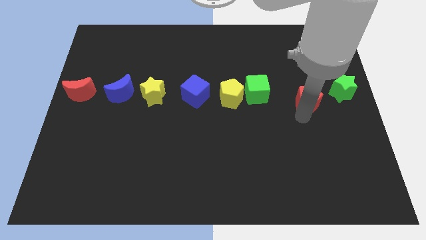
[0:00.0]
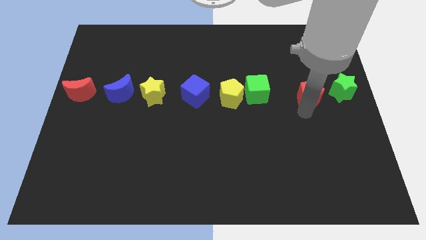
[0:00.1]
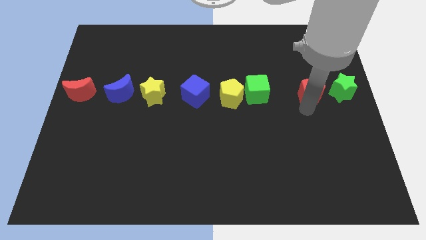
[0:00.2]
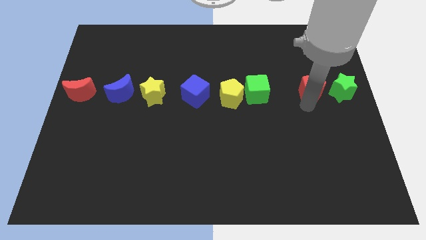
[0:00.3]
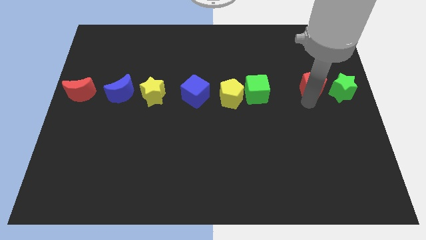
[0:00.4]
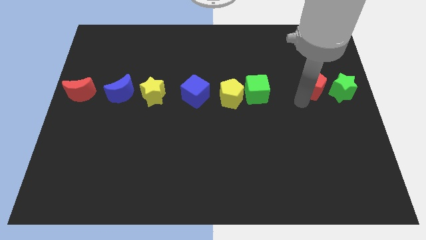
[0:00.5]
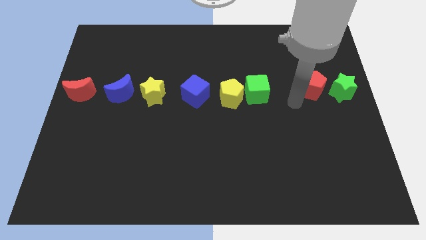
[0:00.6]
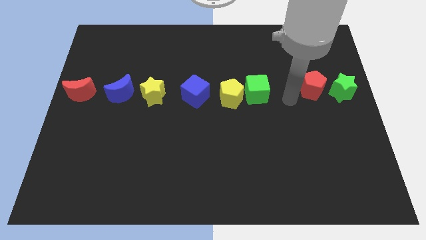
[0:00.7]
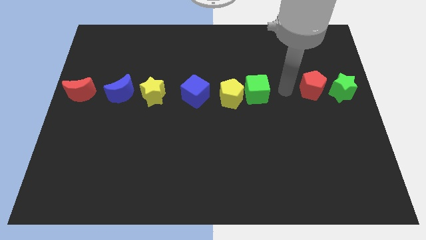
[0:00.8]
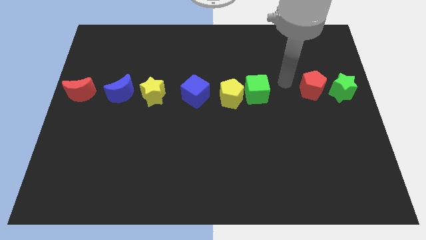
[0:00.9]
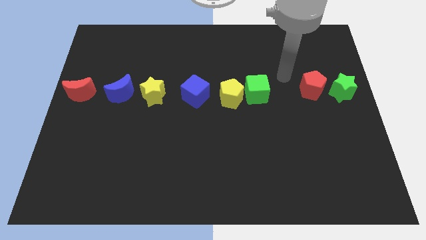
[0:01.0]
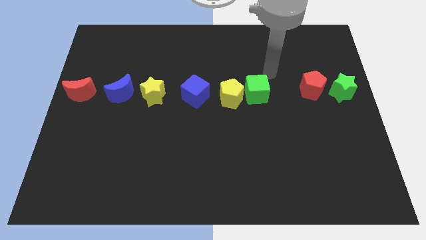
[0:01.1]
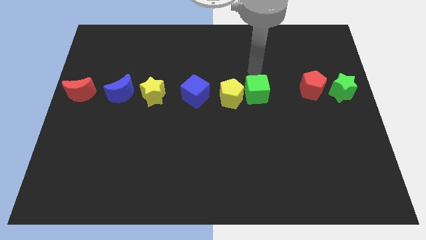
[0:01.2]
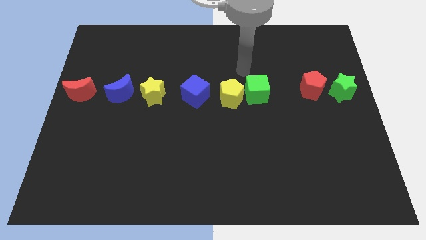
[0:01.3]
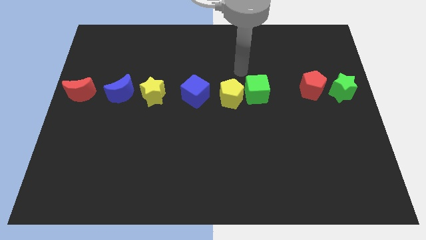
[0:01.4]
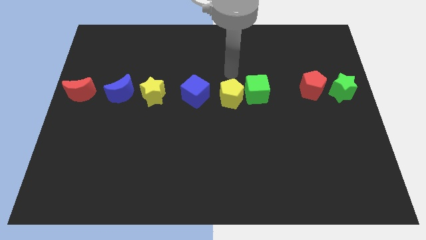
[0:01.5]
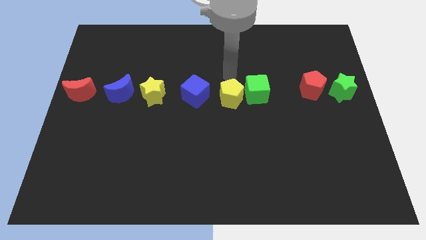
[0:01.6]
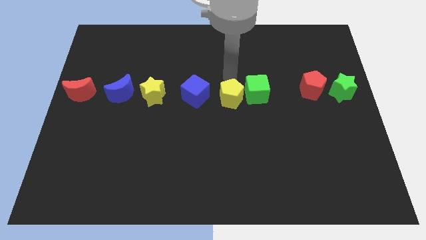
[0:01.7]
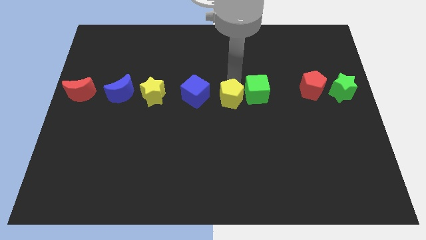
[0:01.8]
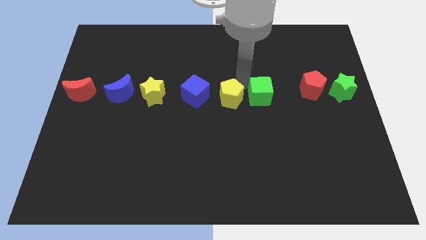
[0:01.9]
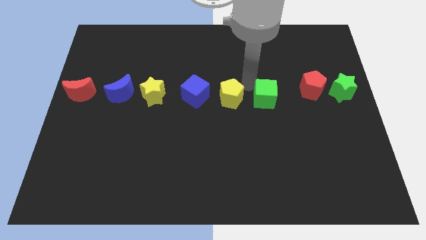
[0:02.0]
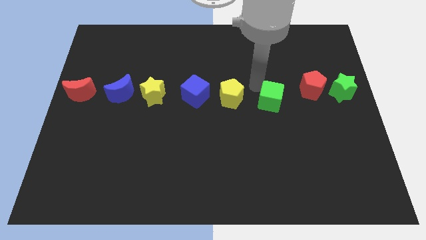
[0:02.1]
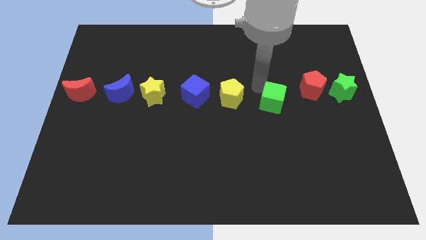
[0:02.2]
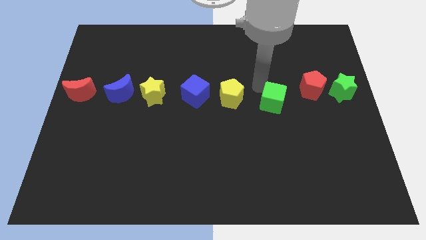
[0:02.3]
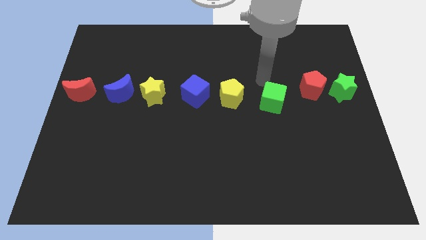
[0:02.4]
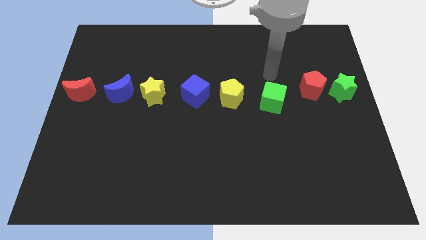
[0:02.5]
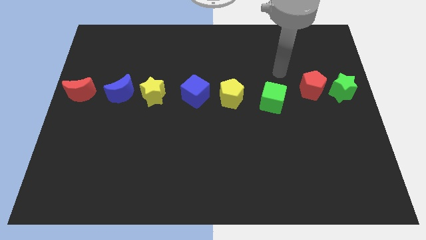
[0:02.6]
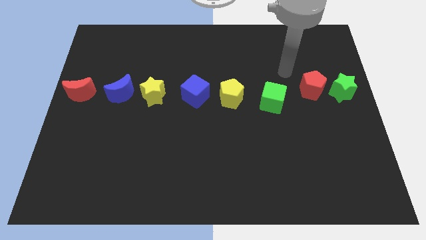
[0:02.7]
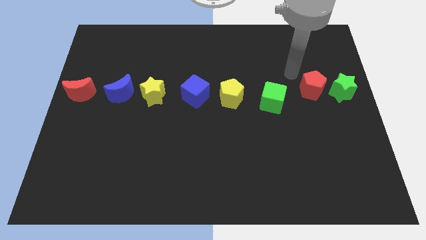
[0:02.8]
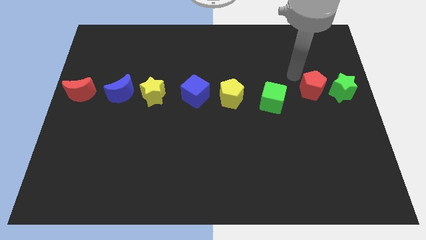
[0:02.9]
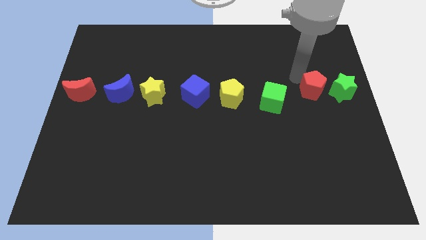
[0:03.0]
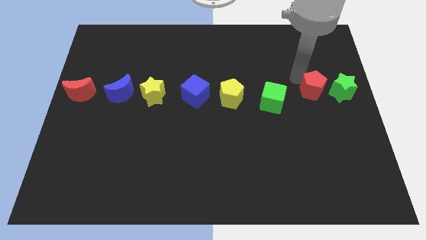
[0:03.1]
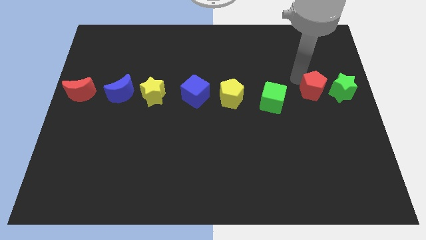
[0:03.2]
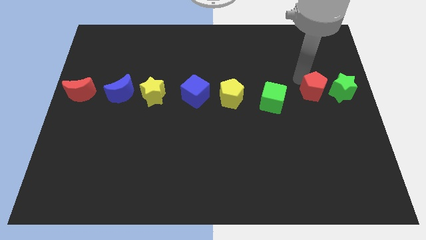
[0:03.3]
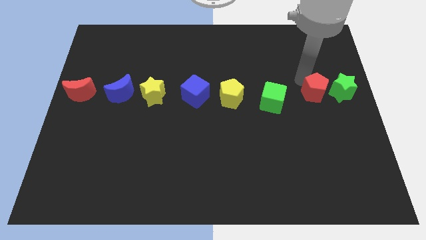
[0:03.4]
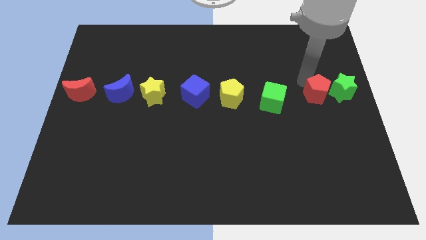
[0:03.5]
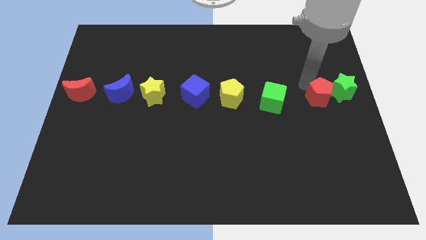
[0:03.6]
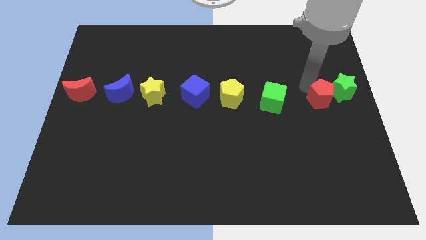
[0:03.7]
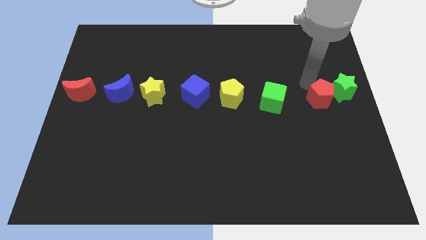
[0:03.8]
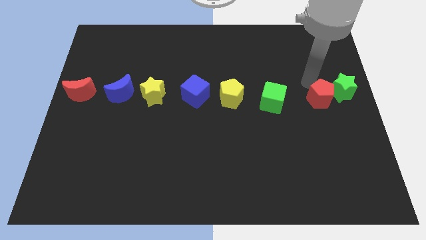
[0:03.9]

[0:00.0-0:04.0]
adjust the group of blocks to form a horizontal line

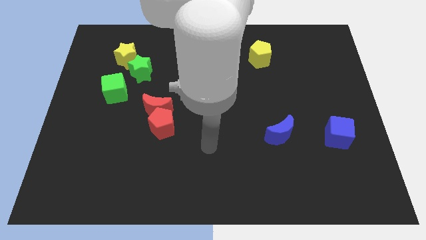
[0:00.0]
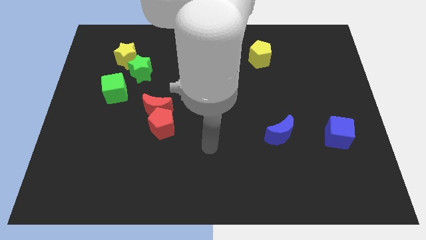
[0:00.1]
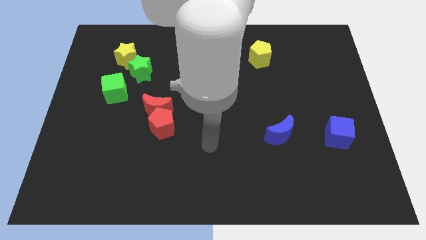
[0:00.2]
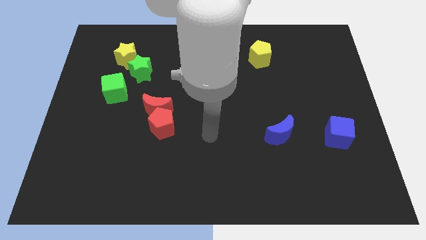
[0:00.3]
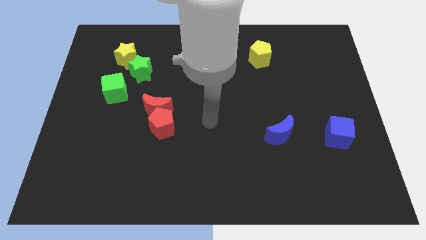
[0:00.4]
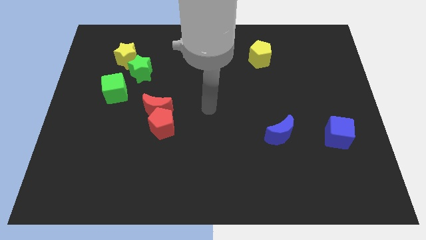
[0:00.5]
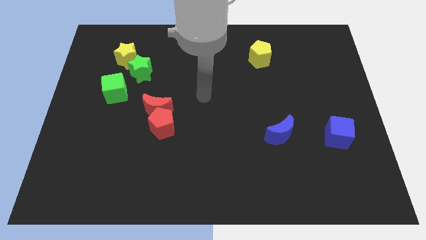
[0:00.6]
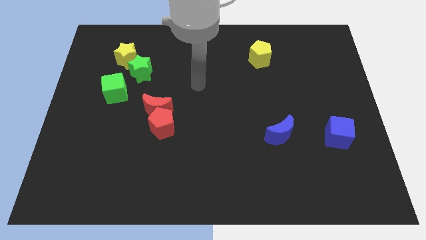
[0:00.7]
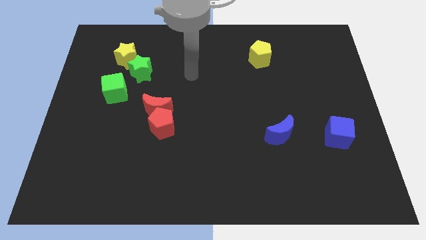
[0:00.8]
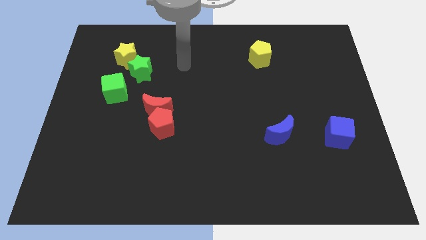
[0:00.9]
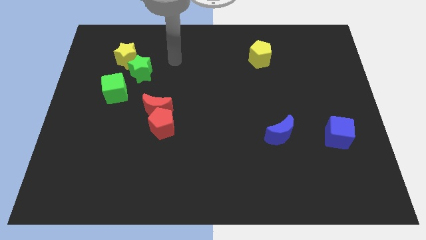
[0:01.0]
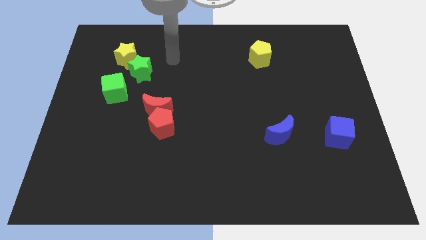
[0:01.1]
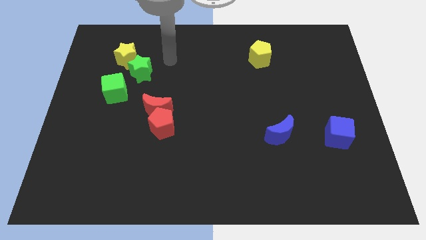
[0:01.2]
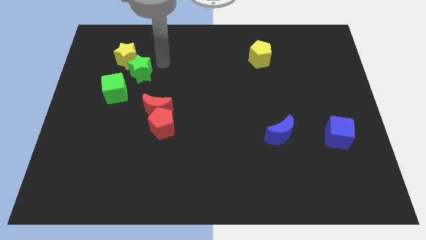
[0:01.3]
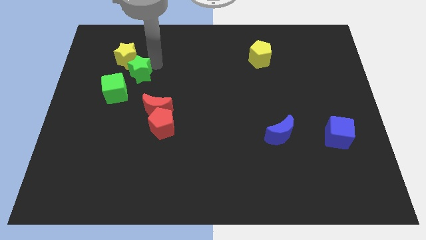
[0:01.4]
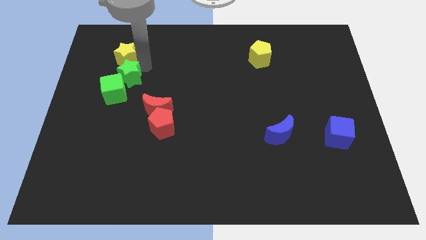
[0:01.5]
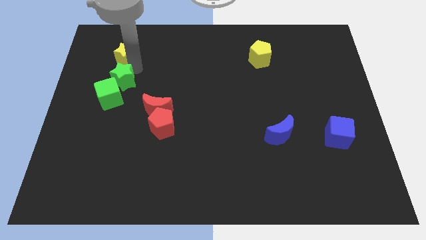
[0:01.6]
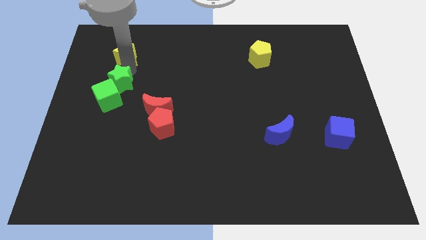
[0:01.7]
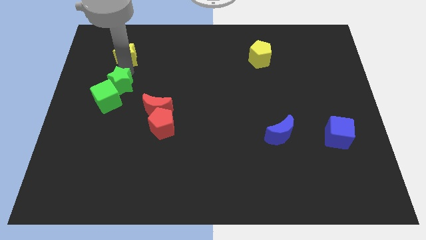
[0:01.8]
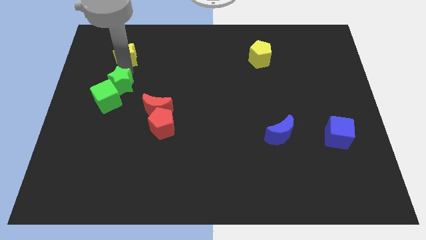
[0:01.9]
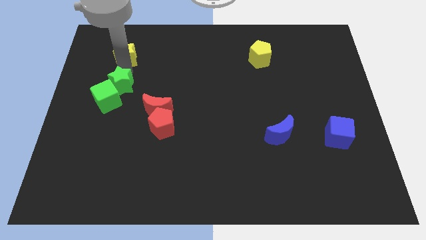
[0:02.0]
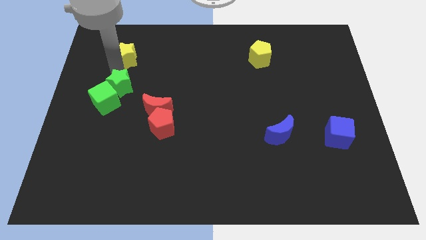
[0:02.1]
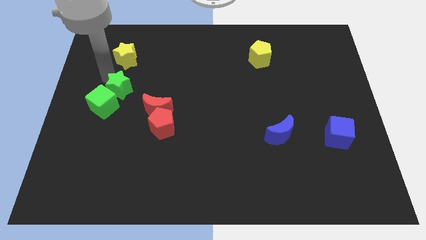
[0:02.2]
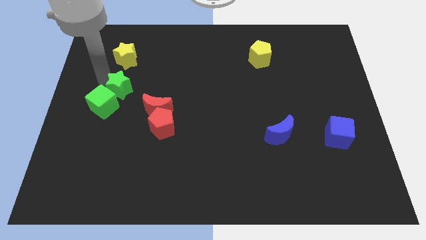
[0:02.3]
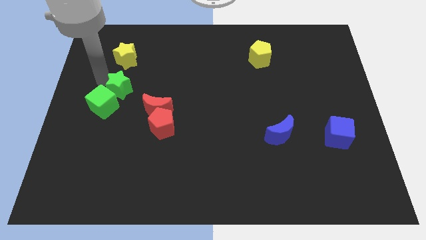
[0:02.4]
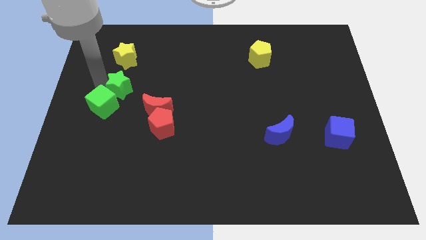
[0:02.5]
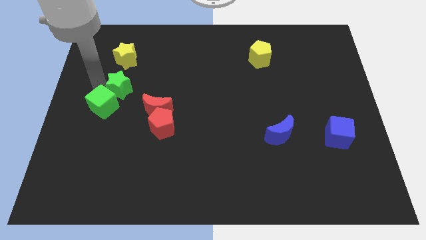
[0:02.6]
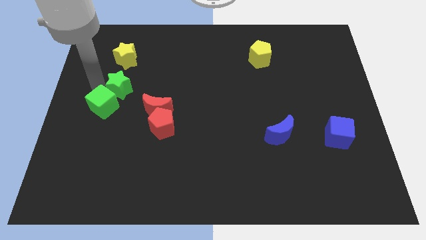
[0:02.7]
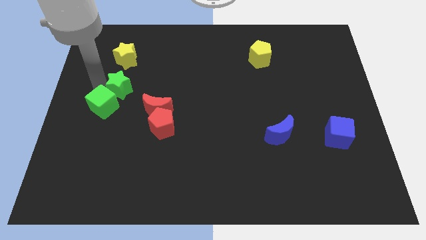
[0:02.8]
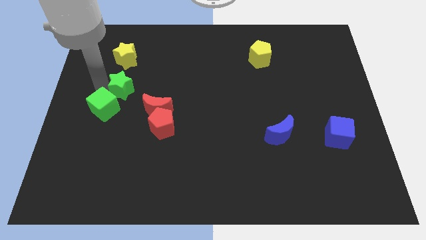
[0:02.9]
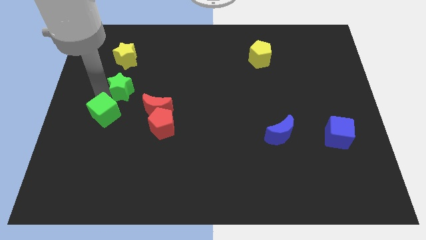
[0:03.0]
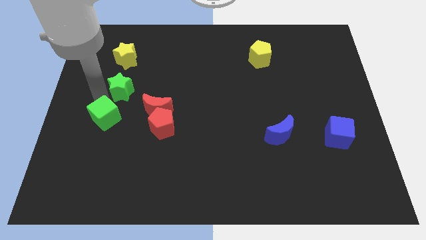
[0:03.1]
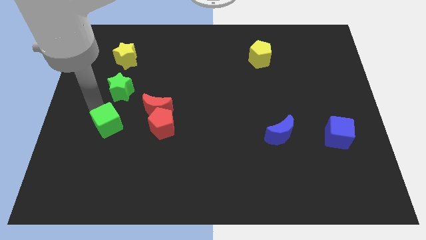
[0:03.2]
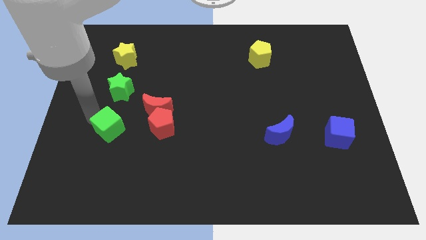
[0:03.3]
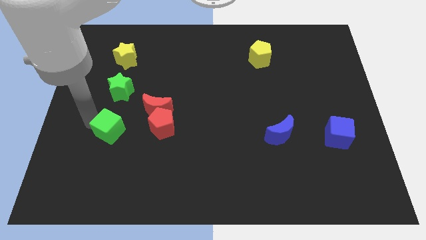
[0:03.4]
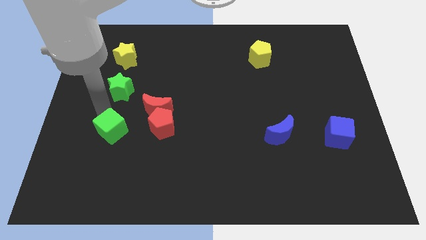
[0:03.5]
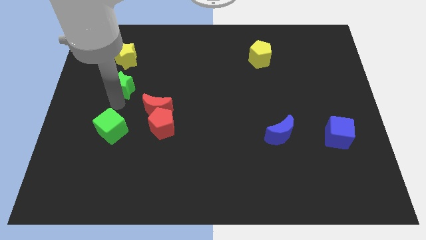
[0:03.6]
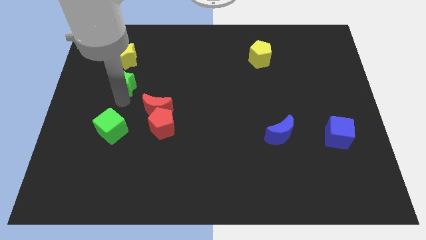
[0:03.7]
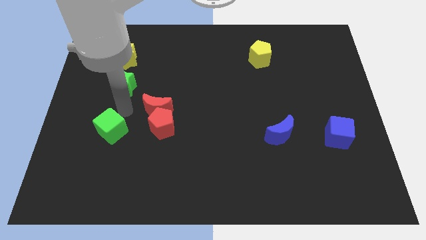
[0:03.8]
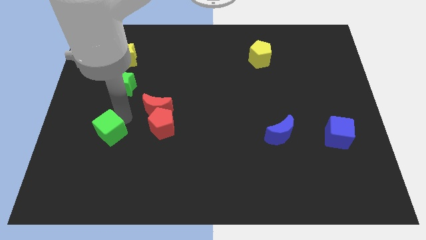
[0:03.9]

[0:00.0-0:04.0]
push the green cube to left of red pentagon side

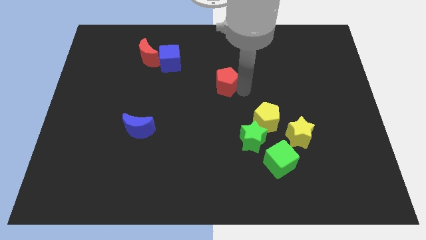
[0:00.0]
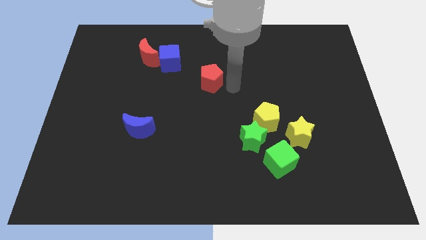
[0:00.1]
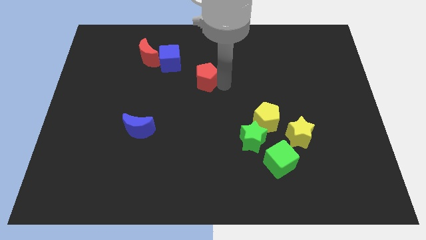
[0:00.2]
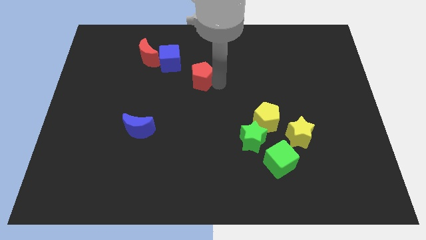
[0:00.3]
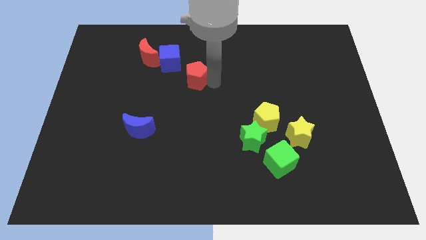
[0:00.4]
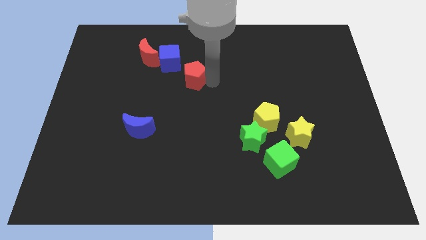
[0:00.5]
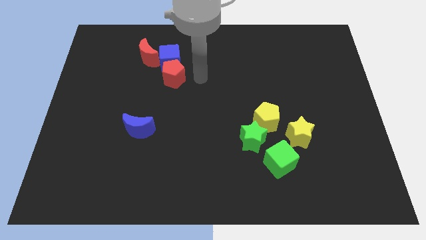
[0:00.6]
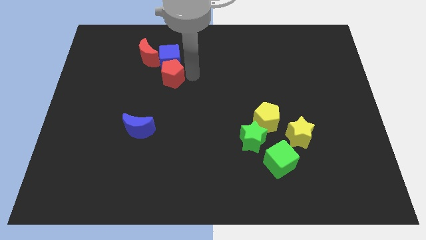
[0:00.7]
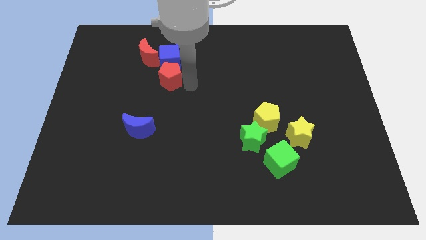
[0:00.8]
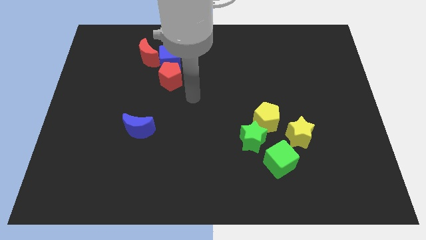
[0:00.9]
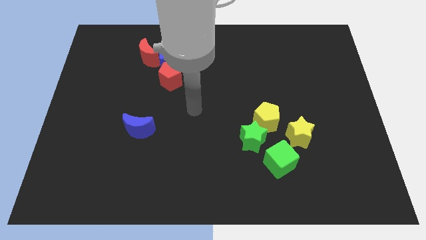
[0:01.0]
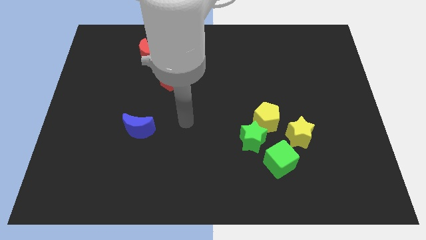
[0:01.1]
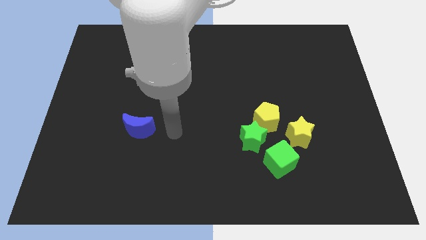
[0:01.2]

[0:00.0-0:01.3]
place the red pentagon below the blue cube
